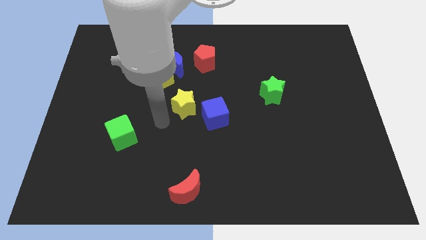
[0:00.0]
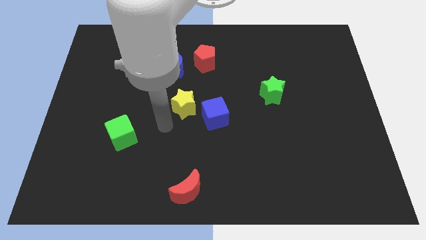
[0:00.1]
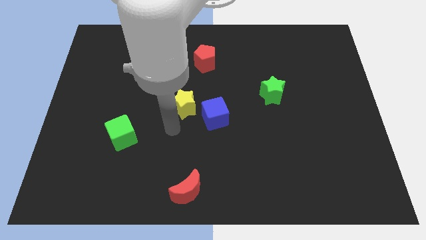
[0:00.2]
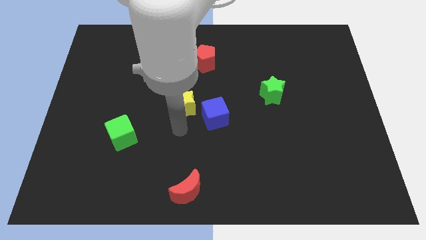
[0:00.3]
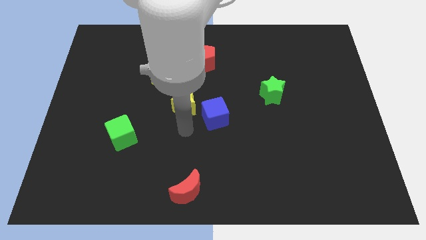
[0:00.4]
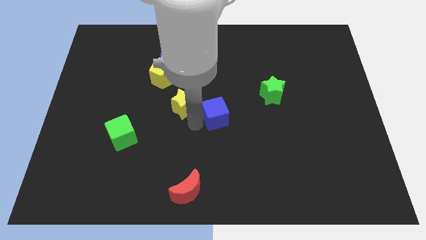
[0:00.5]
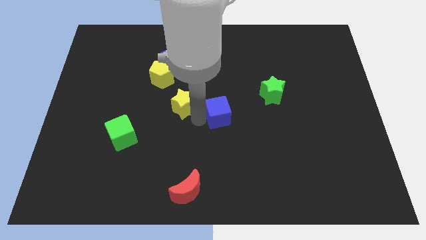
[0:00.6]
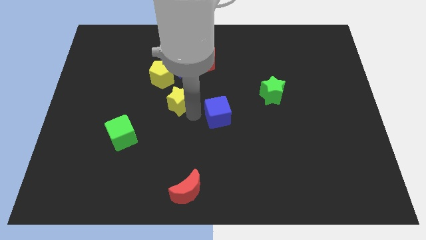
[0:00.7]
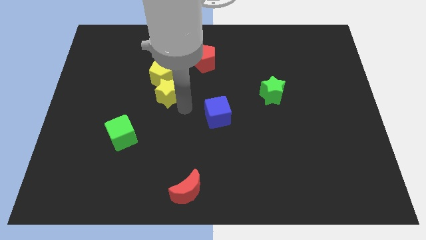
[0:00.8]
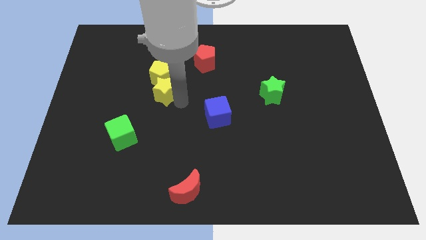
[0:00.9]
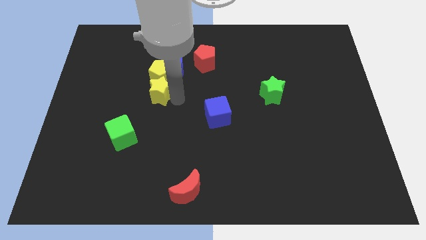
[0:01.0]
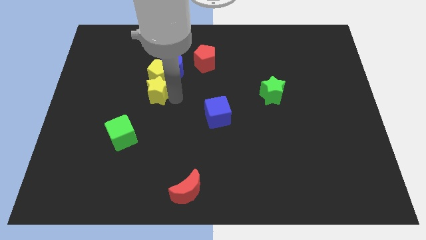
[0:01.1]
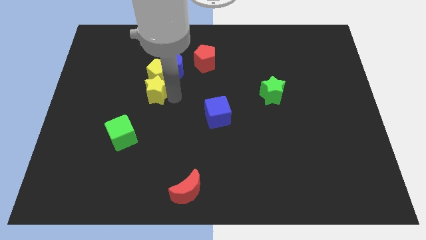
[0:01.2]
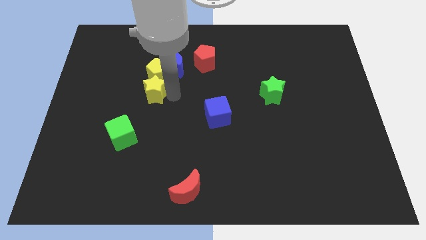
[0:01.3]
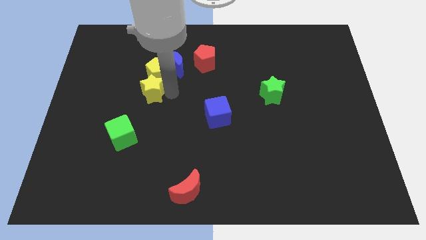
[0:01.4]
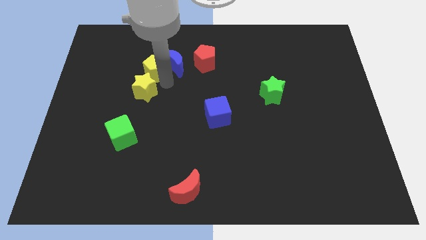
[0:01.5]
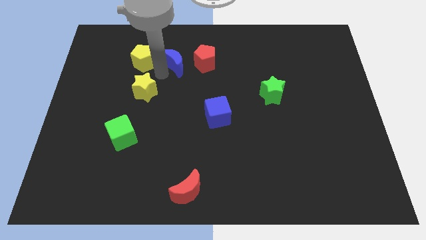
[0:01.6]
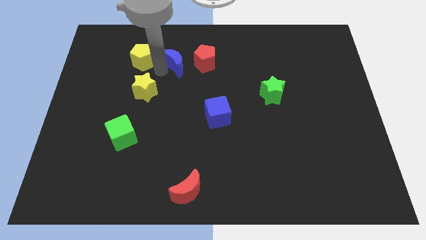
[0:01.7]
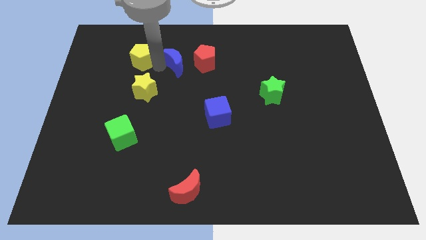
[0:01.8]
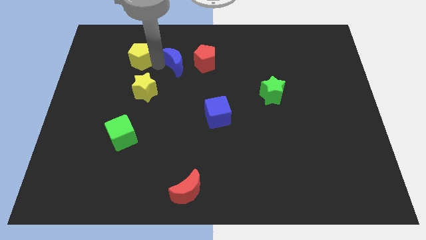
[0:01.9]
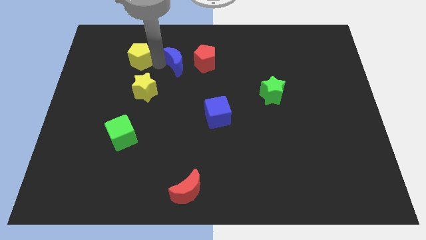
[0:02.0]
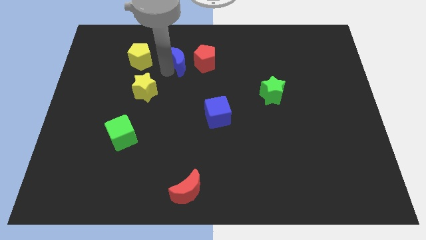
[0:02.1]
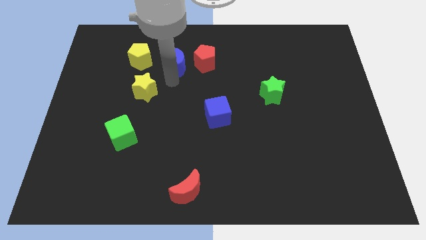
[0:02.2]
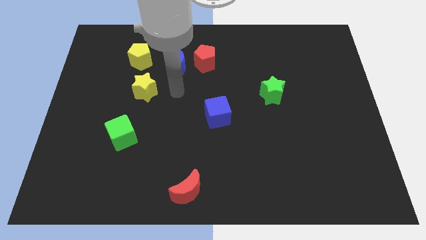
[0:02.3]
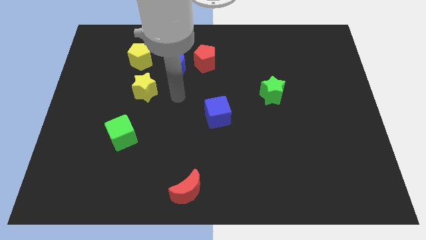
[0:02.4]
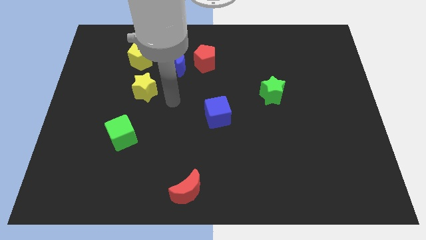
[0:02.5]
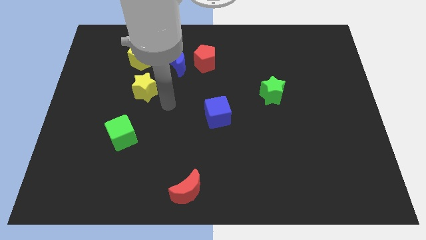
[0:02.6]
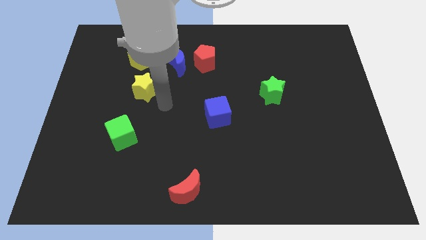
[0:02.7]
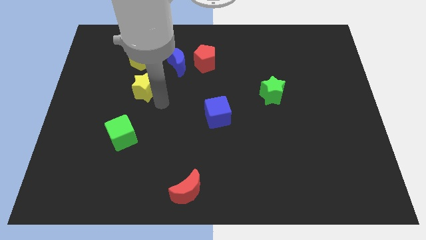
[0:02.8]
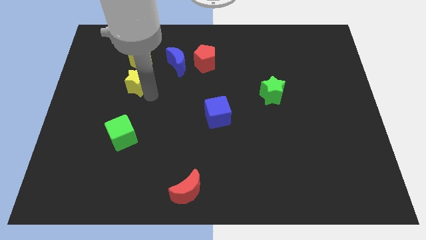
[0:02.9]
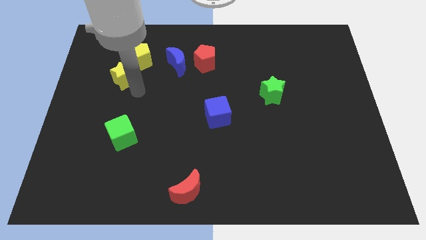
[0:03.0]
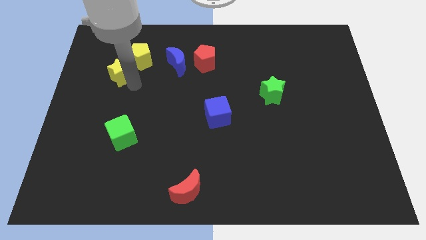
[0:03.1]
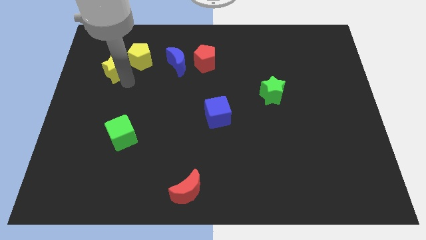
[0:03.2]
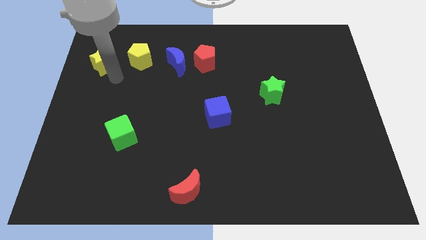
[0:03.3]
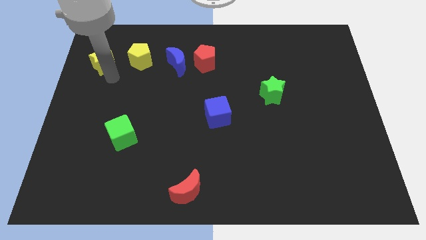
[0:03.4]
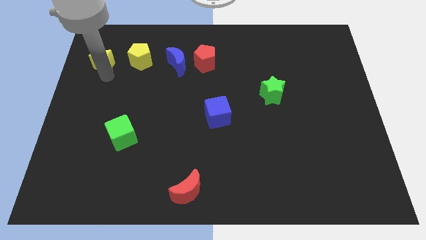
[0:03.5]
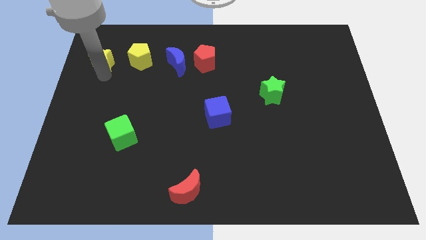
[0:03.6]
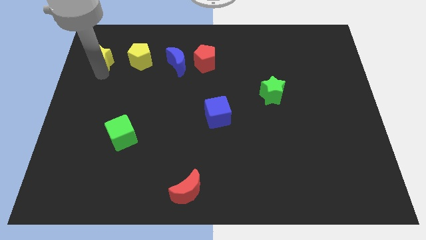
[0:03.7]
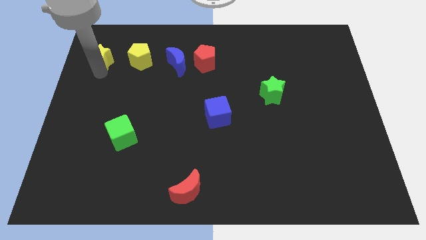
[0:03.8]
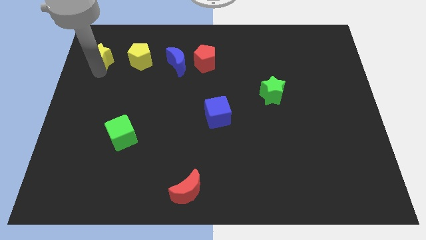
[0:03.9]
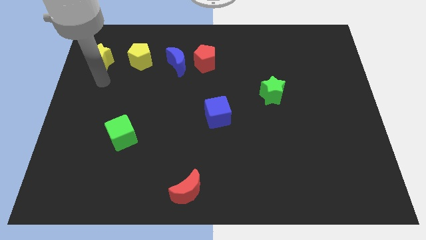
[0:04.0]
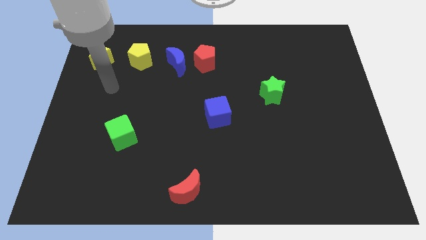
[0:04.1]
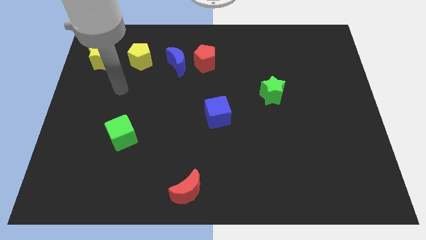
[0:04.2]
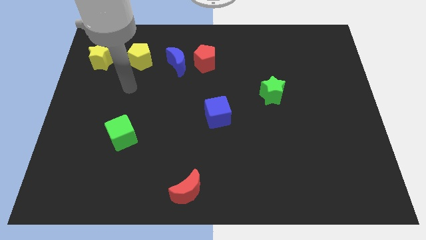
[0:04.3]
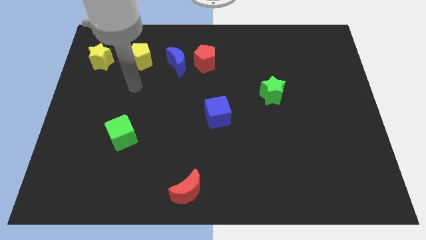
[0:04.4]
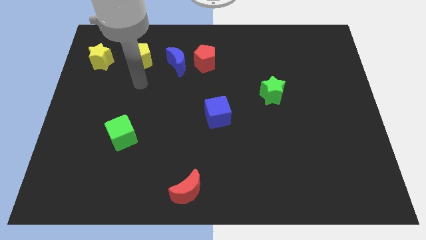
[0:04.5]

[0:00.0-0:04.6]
move yellow blocks left beside the blue moon

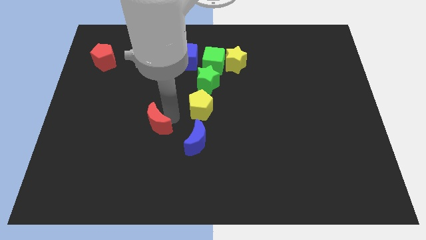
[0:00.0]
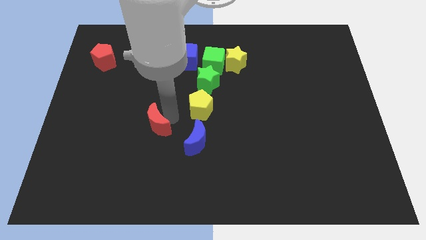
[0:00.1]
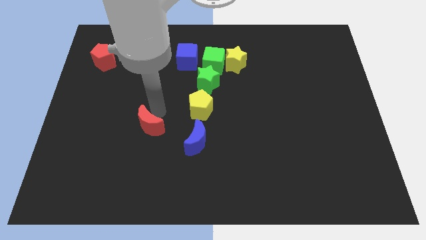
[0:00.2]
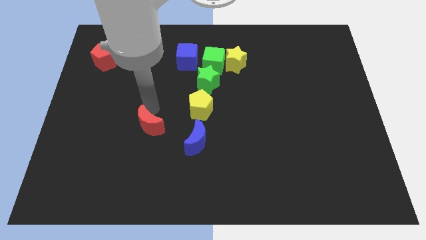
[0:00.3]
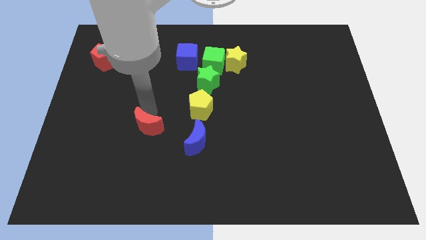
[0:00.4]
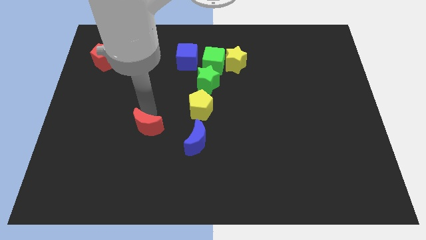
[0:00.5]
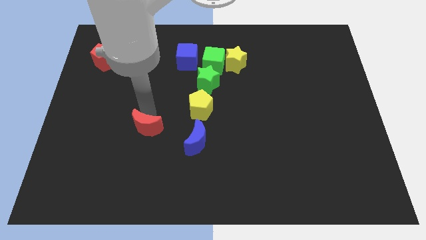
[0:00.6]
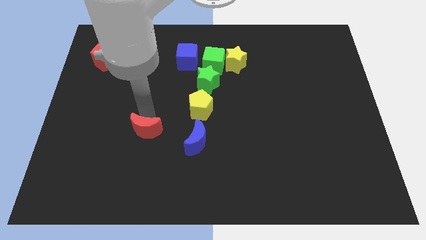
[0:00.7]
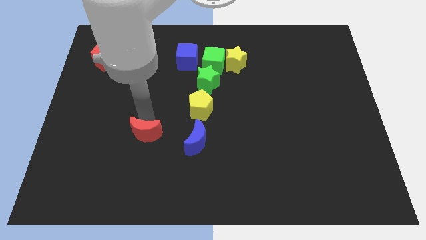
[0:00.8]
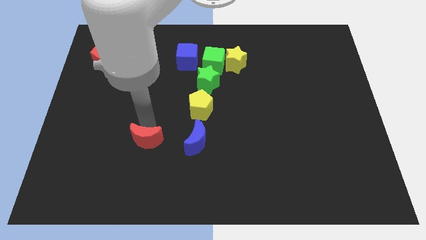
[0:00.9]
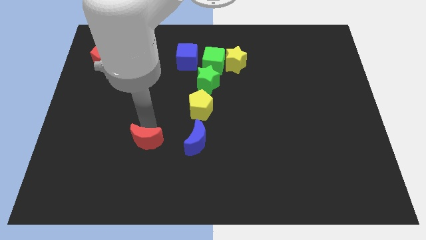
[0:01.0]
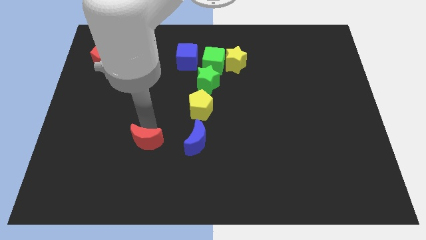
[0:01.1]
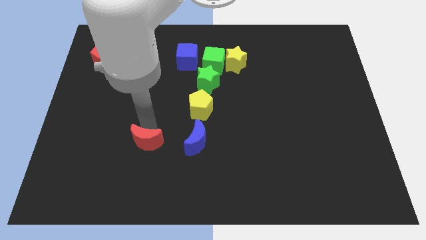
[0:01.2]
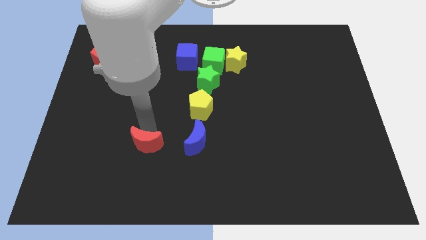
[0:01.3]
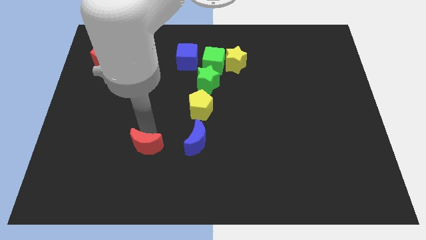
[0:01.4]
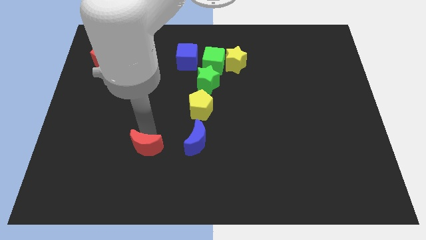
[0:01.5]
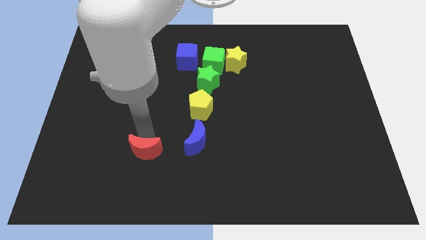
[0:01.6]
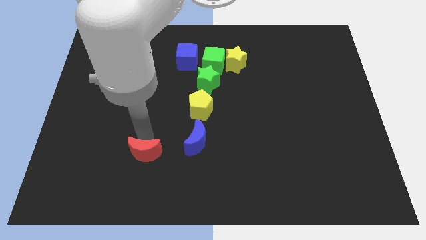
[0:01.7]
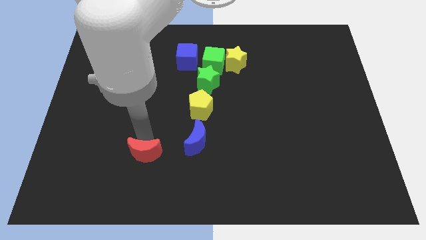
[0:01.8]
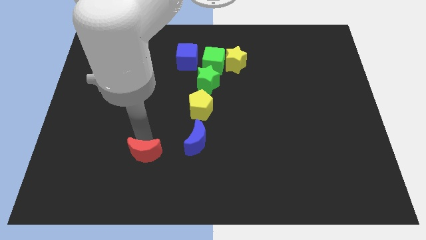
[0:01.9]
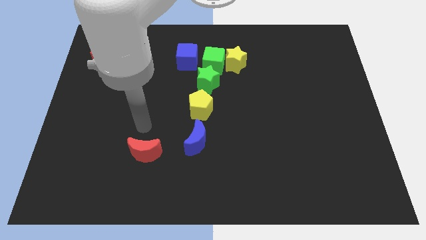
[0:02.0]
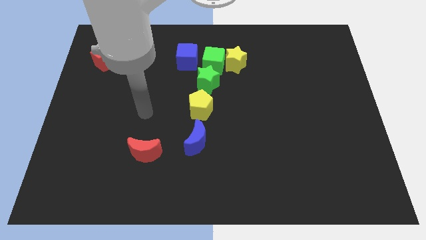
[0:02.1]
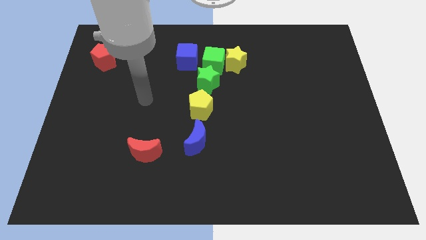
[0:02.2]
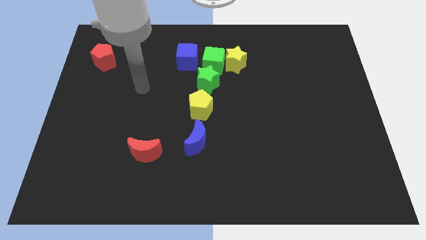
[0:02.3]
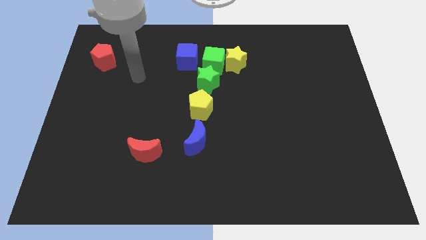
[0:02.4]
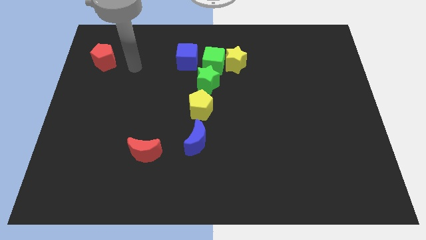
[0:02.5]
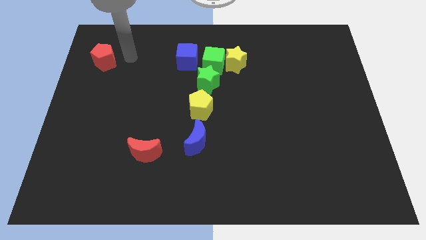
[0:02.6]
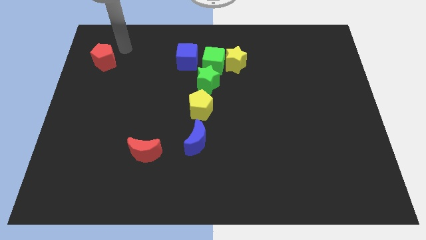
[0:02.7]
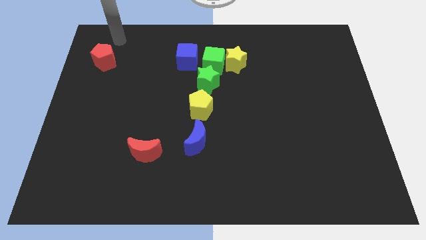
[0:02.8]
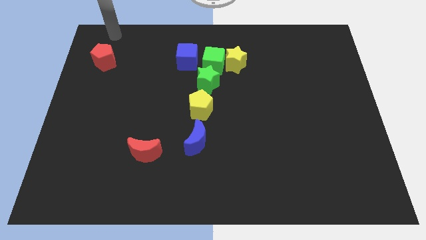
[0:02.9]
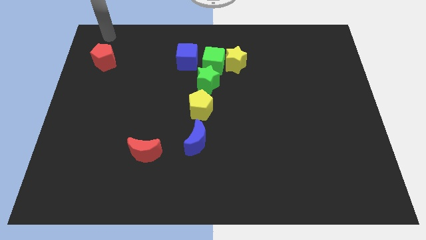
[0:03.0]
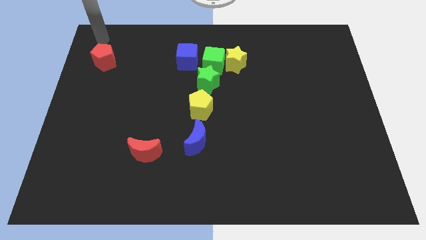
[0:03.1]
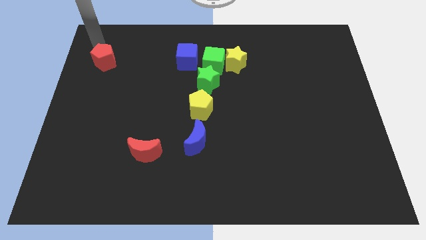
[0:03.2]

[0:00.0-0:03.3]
slightly push the red crescent towards the left of the blue crescent

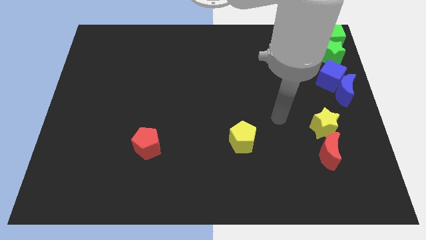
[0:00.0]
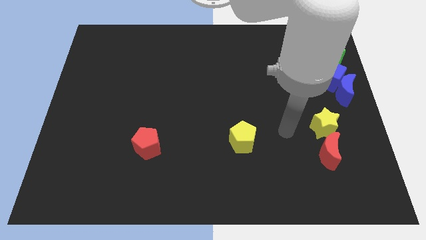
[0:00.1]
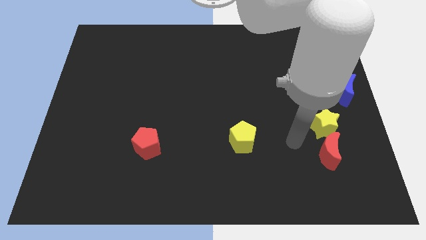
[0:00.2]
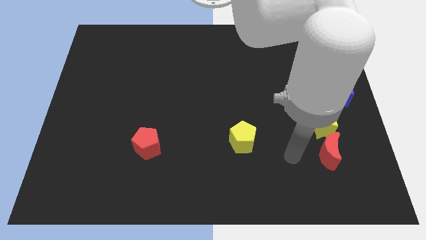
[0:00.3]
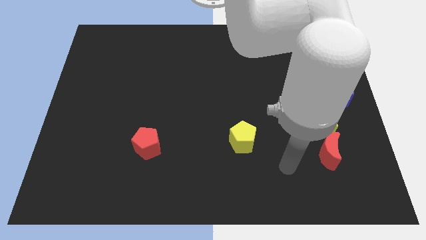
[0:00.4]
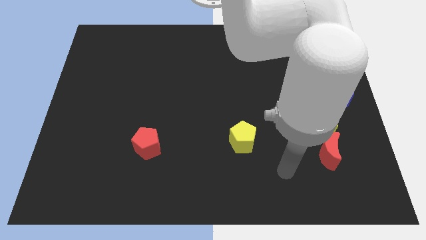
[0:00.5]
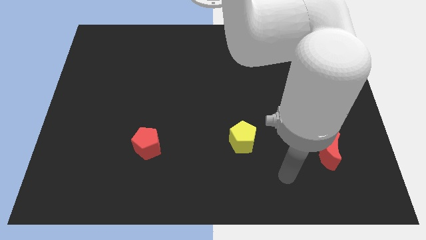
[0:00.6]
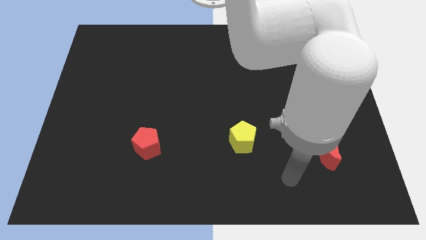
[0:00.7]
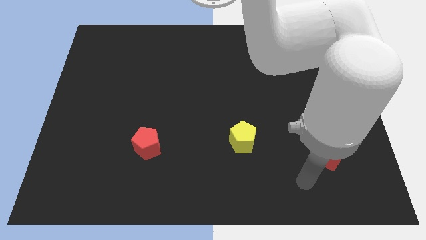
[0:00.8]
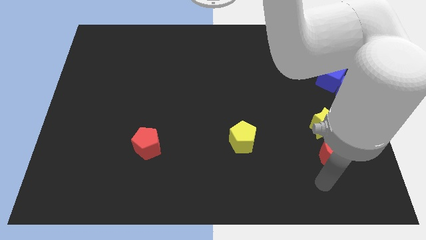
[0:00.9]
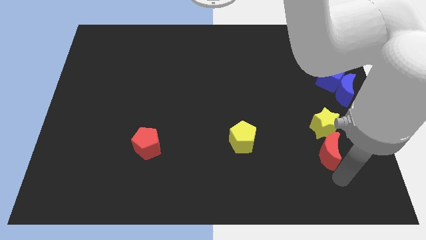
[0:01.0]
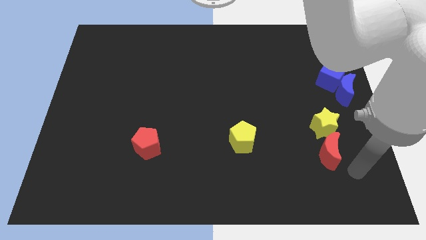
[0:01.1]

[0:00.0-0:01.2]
point your arm at the bottom of red moon
